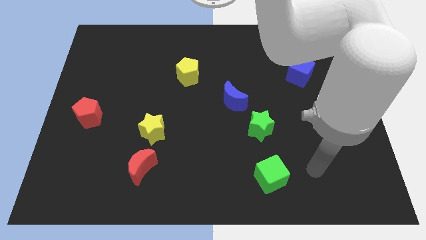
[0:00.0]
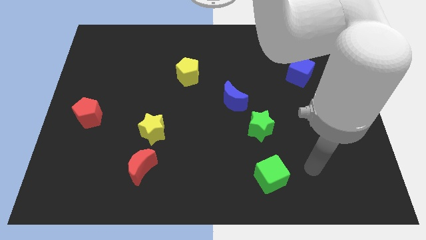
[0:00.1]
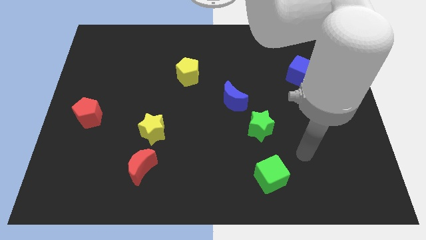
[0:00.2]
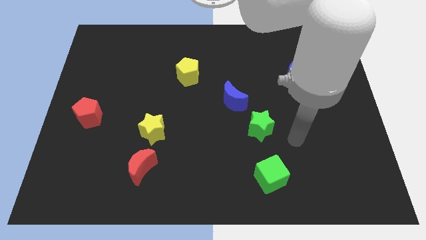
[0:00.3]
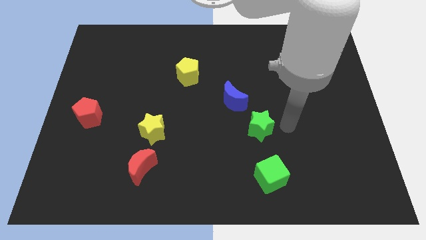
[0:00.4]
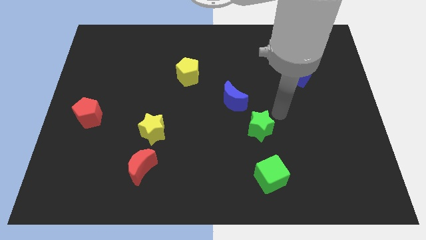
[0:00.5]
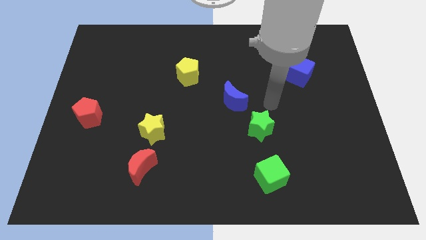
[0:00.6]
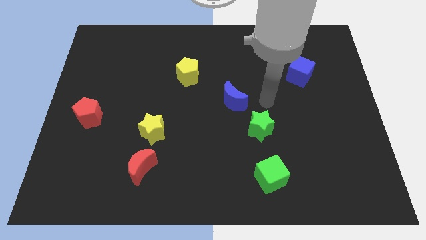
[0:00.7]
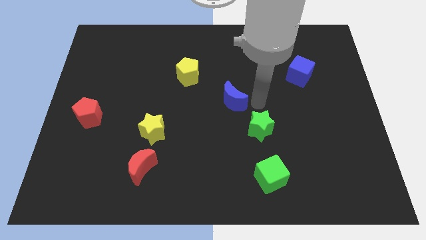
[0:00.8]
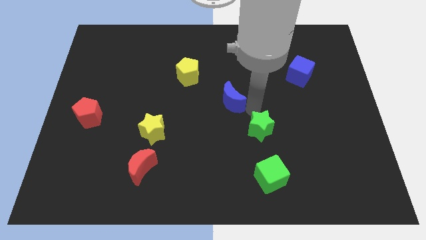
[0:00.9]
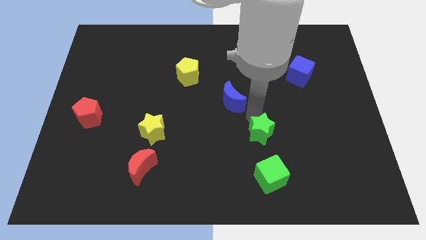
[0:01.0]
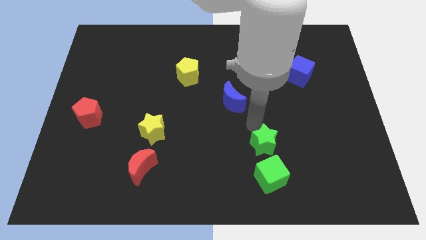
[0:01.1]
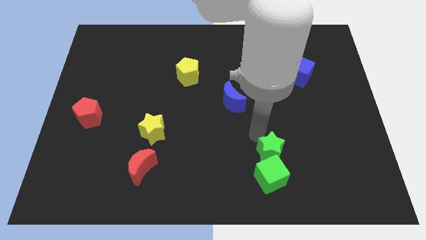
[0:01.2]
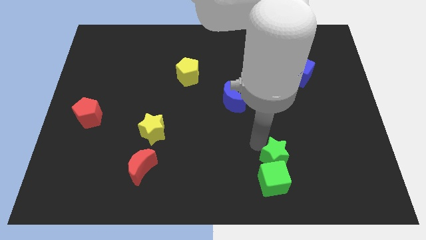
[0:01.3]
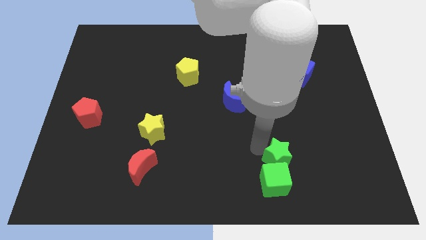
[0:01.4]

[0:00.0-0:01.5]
push green star into the green cube

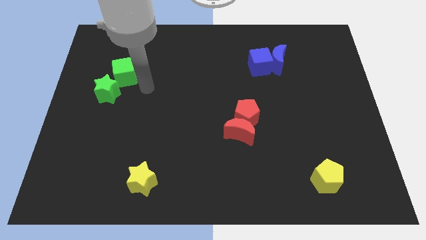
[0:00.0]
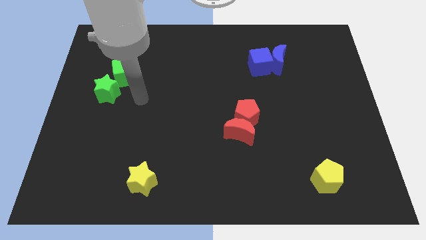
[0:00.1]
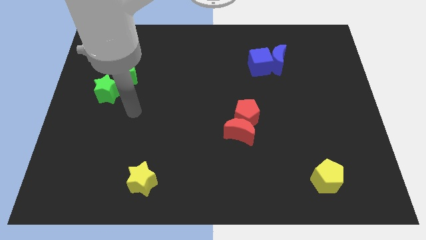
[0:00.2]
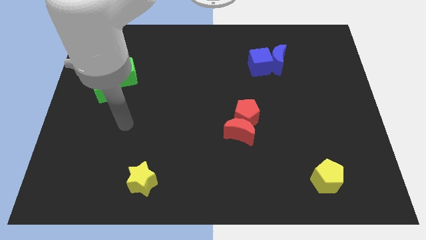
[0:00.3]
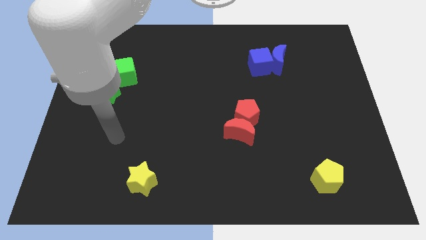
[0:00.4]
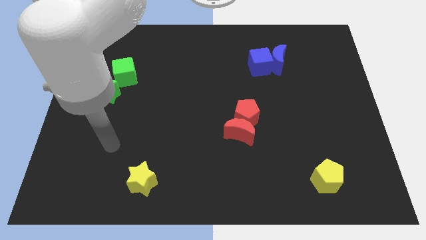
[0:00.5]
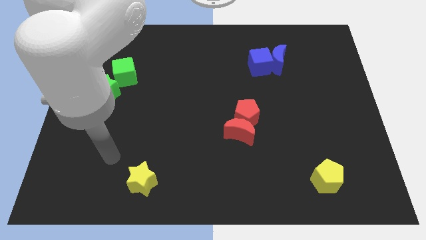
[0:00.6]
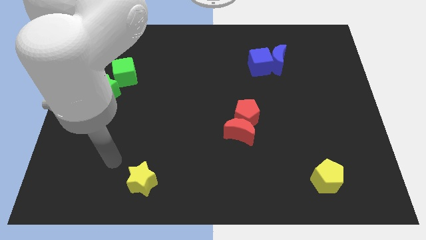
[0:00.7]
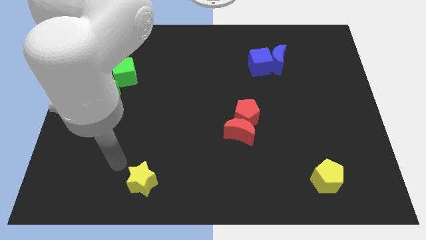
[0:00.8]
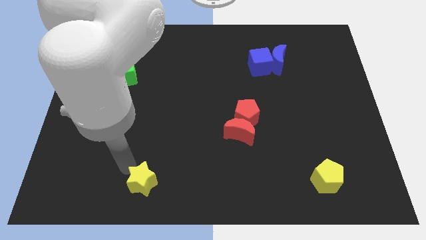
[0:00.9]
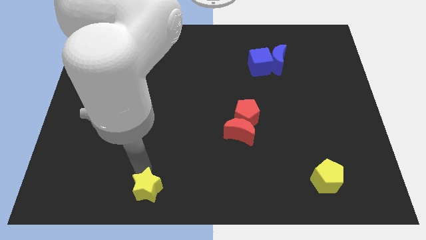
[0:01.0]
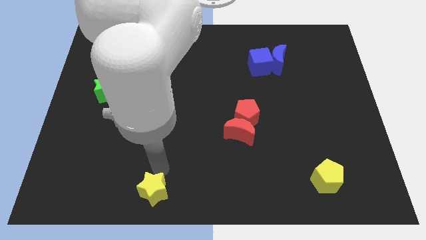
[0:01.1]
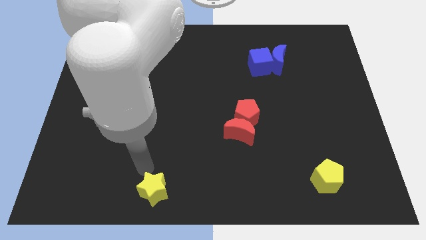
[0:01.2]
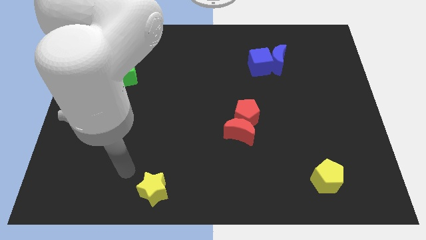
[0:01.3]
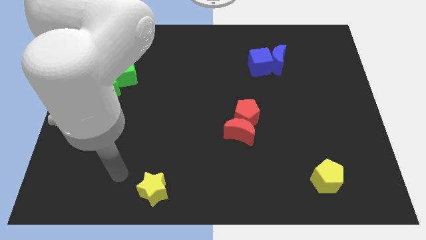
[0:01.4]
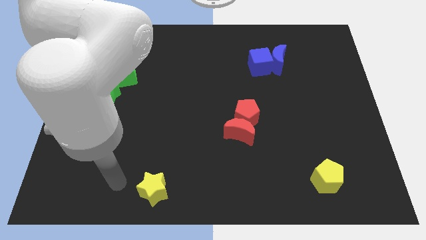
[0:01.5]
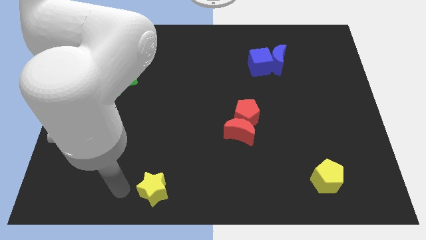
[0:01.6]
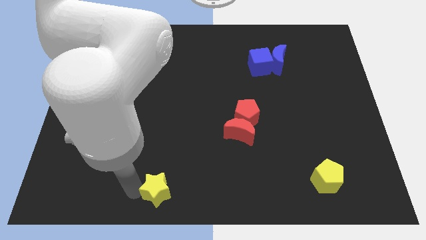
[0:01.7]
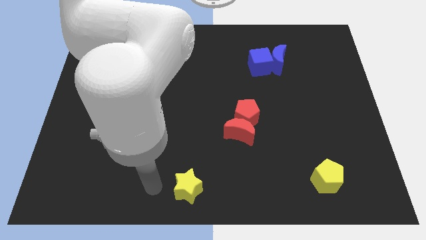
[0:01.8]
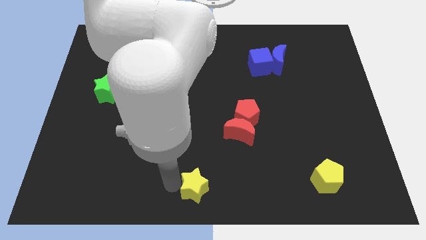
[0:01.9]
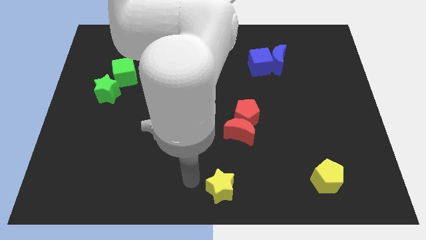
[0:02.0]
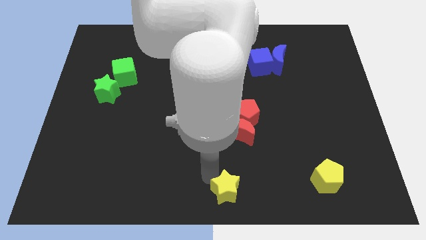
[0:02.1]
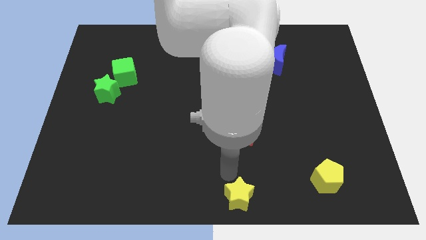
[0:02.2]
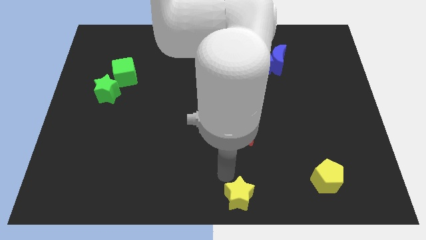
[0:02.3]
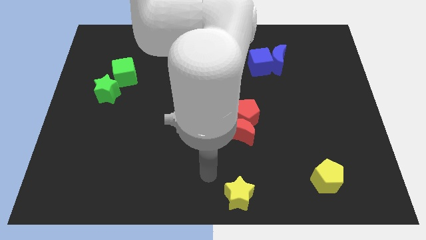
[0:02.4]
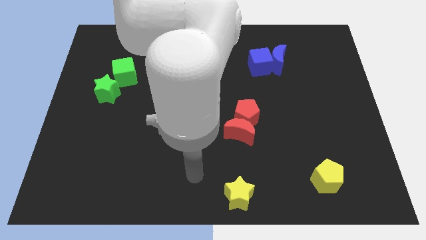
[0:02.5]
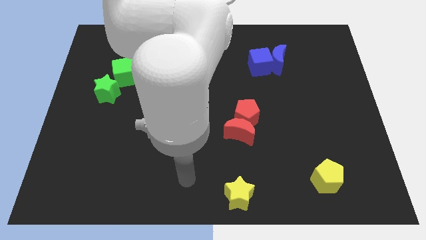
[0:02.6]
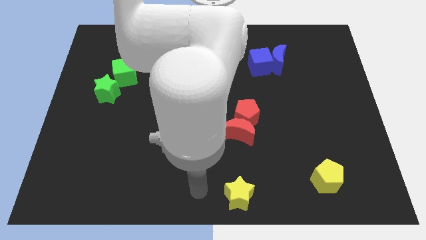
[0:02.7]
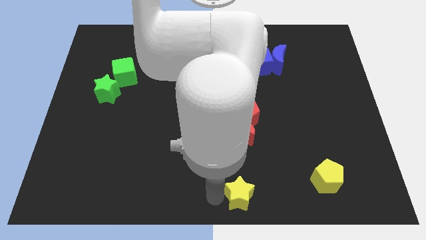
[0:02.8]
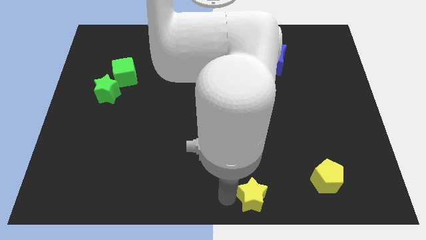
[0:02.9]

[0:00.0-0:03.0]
place the yellow star below the red moon

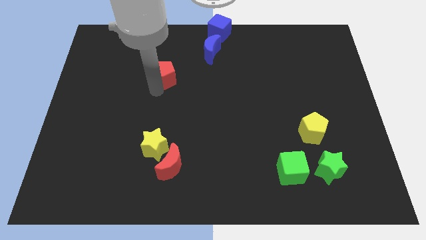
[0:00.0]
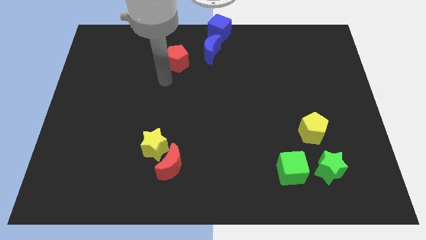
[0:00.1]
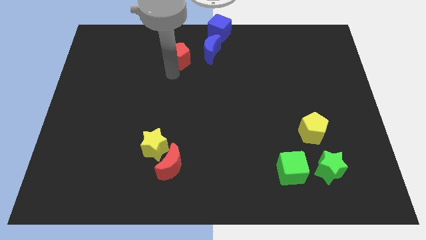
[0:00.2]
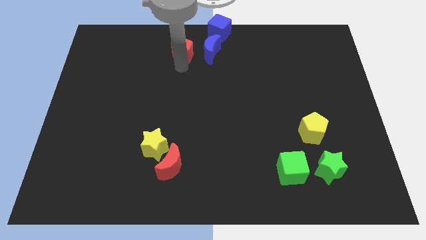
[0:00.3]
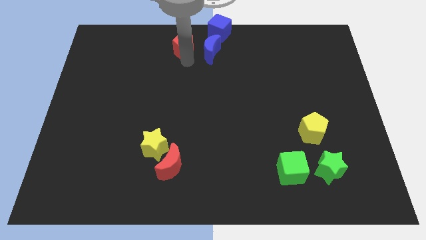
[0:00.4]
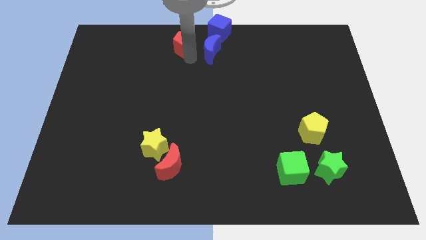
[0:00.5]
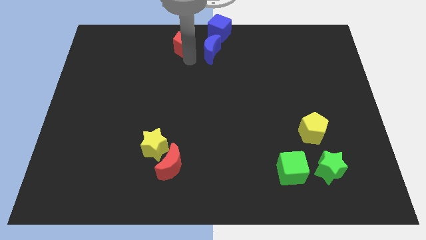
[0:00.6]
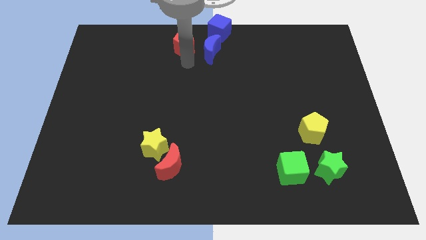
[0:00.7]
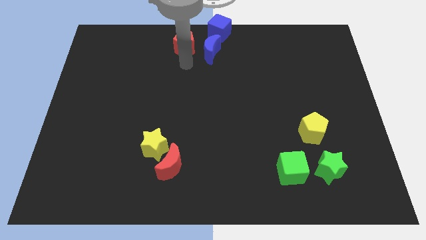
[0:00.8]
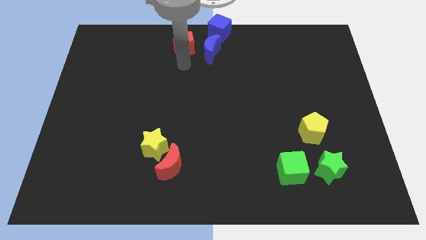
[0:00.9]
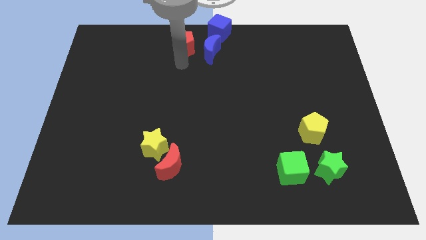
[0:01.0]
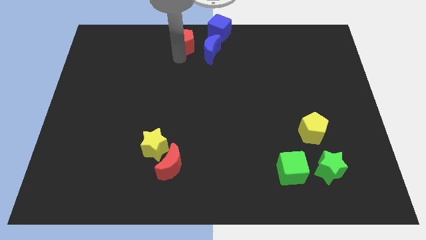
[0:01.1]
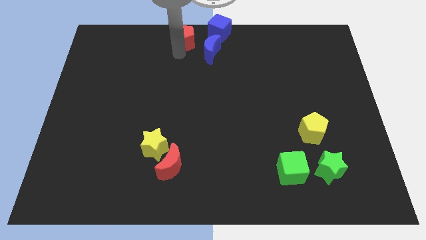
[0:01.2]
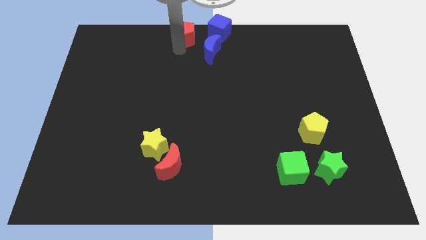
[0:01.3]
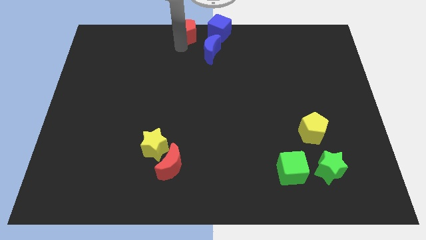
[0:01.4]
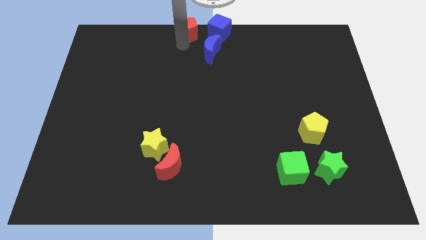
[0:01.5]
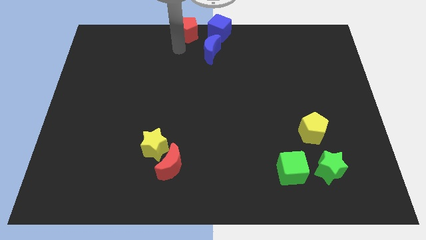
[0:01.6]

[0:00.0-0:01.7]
move the red pentagon to the left of the blue cube

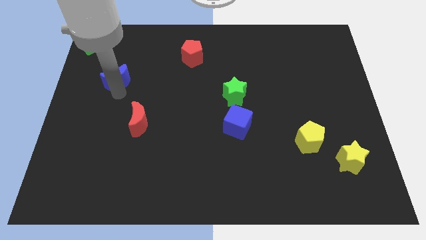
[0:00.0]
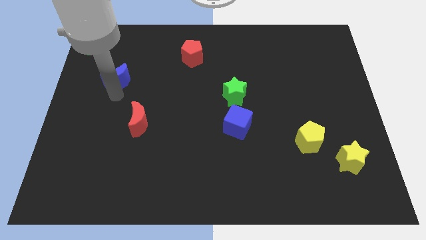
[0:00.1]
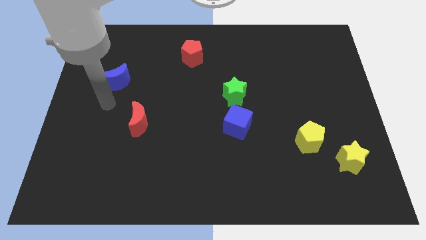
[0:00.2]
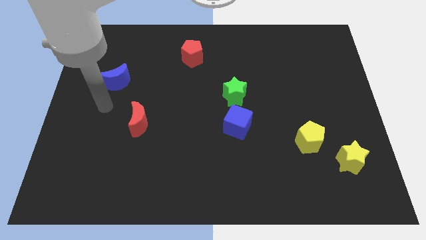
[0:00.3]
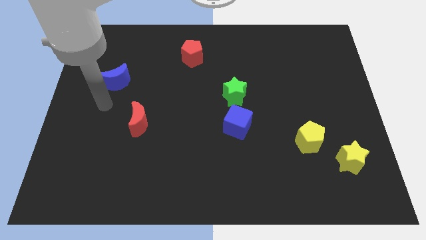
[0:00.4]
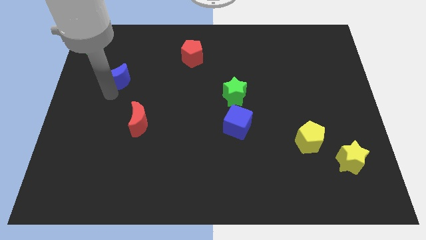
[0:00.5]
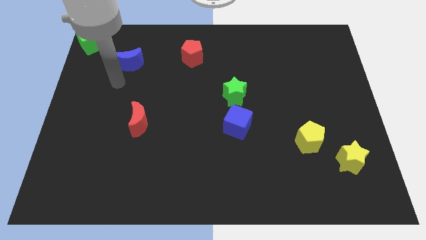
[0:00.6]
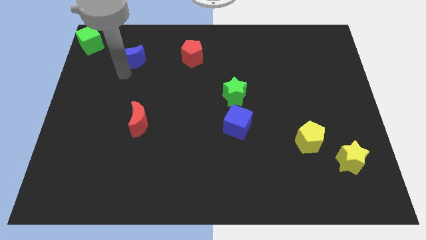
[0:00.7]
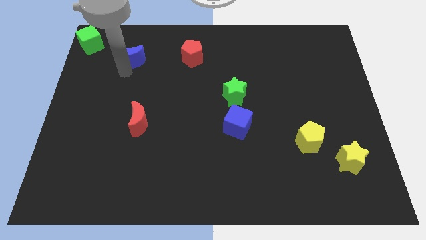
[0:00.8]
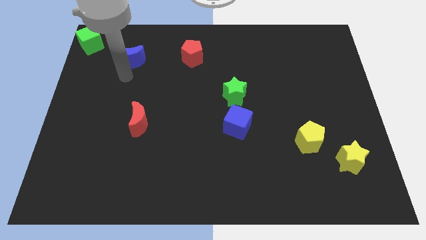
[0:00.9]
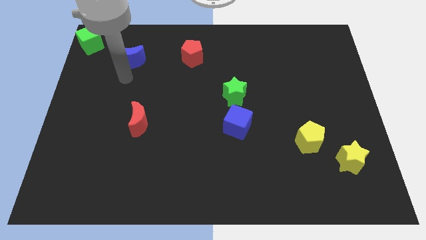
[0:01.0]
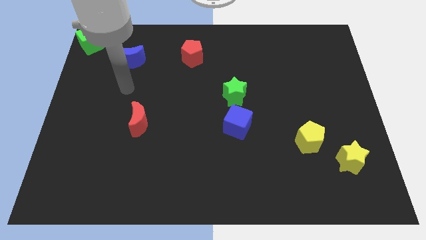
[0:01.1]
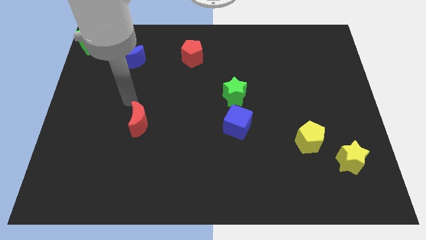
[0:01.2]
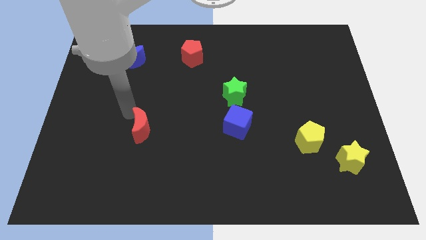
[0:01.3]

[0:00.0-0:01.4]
place the blue moon parallel to the red pentagon

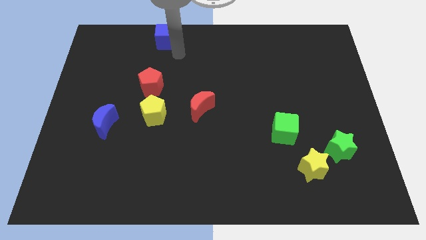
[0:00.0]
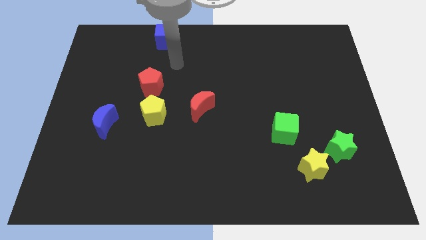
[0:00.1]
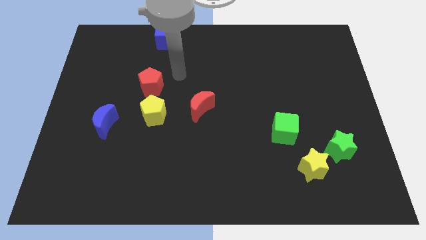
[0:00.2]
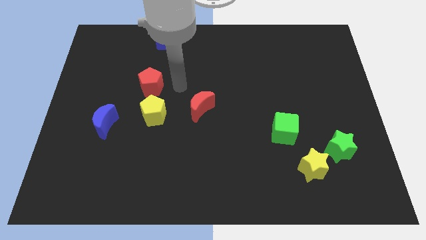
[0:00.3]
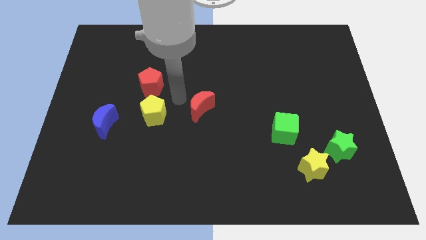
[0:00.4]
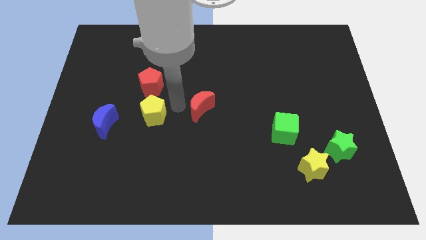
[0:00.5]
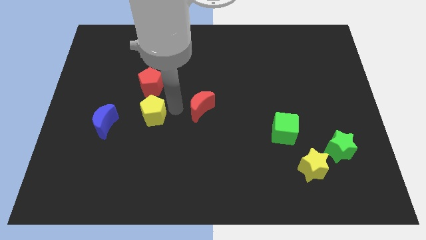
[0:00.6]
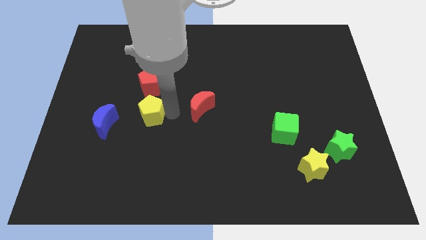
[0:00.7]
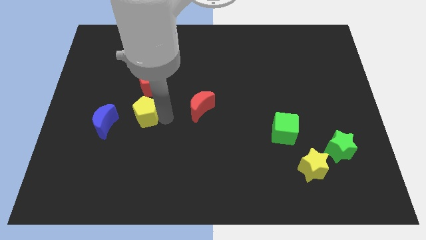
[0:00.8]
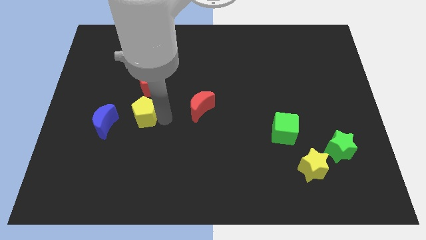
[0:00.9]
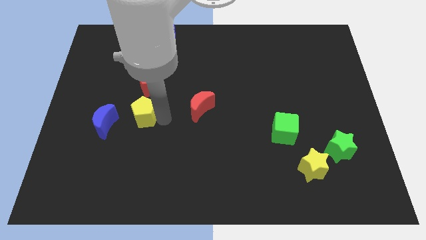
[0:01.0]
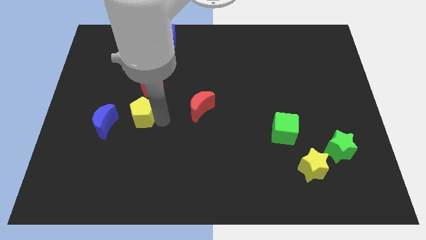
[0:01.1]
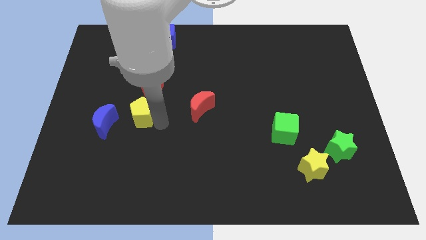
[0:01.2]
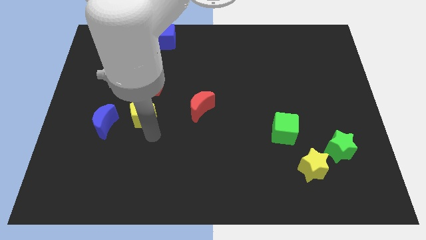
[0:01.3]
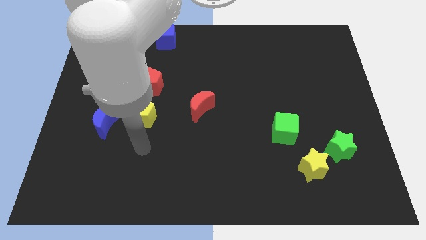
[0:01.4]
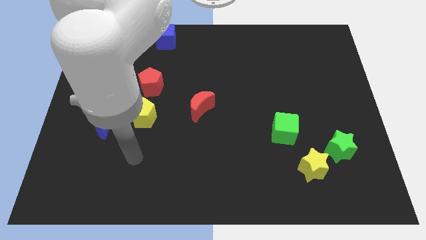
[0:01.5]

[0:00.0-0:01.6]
move the yellow pentagon to the bottom of the red pentagon
